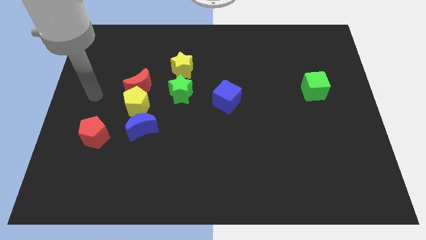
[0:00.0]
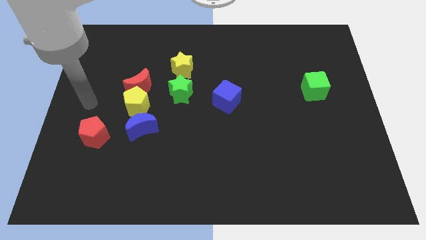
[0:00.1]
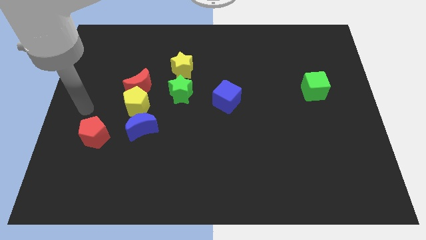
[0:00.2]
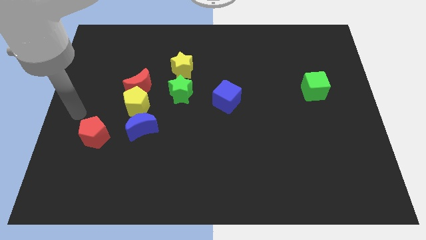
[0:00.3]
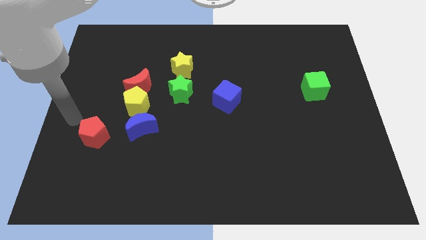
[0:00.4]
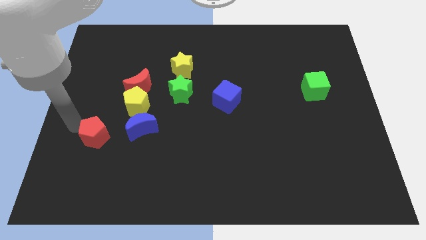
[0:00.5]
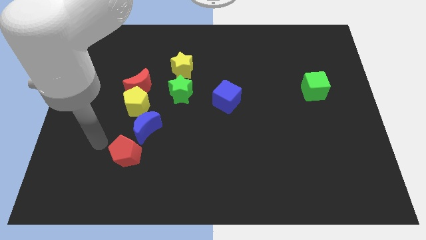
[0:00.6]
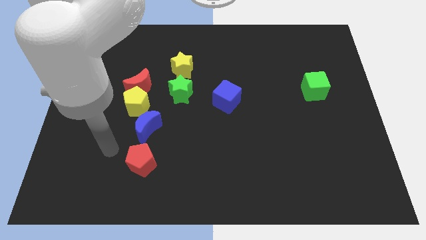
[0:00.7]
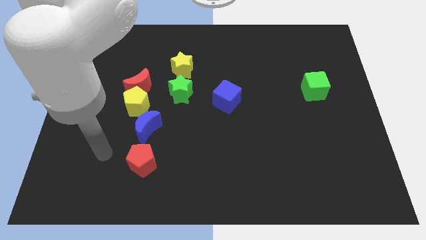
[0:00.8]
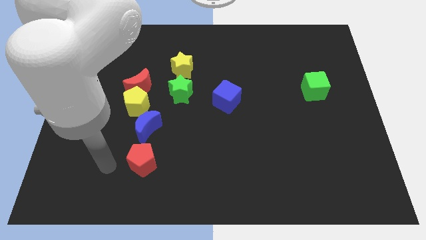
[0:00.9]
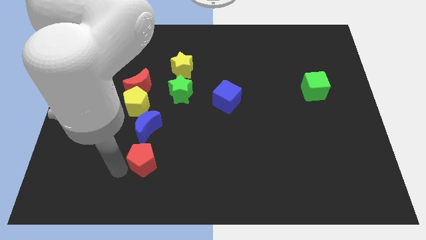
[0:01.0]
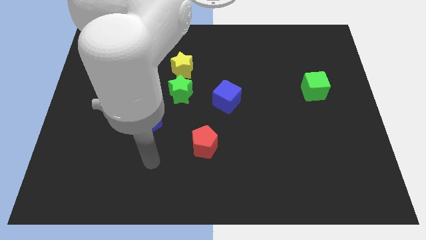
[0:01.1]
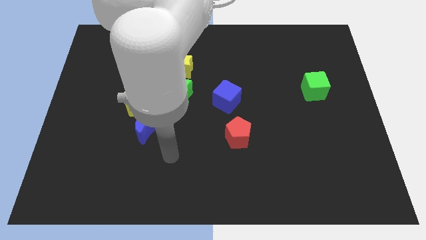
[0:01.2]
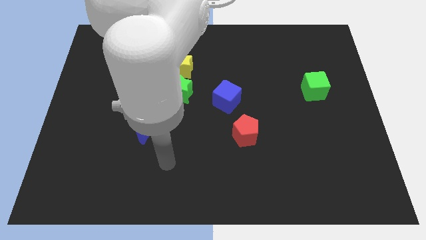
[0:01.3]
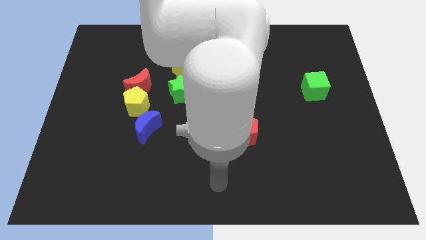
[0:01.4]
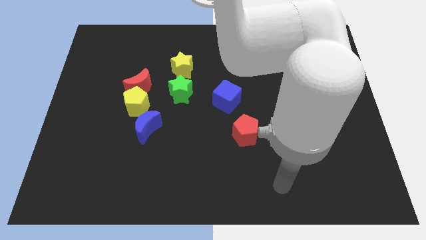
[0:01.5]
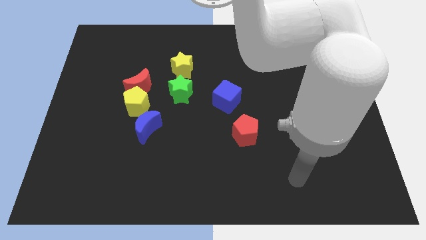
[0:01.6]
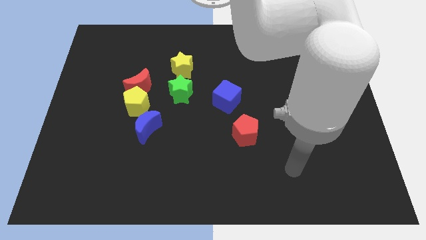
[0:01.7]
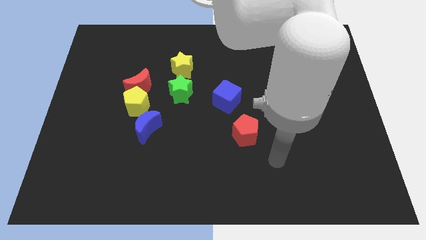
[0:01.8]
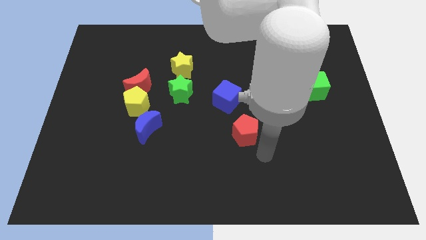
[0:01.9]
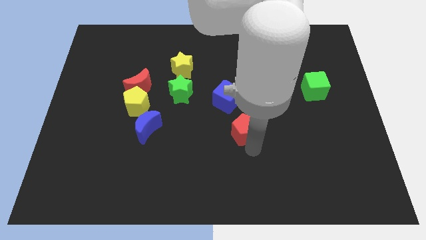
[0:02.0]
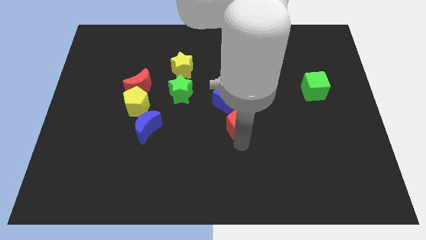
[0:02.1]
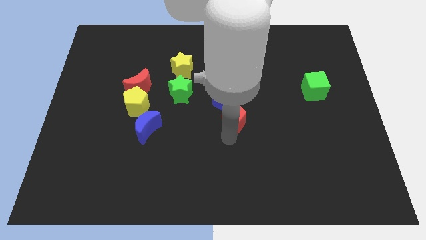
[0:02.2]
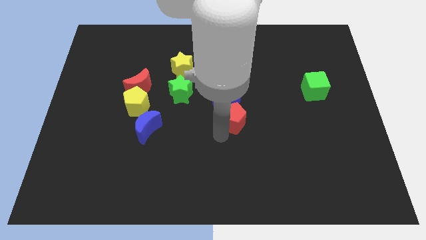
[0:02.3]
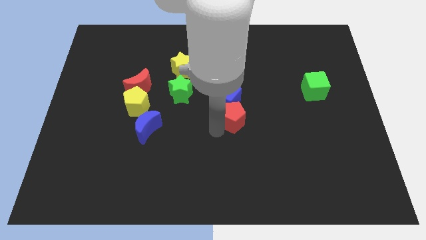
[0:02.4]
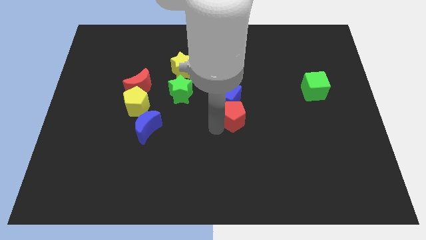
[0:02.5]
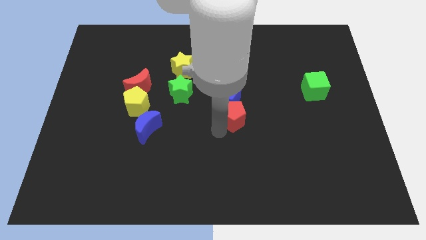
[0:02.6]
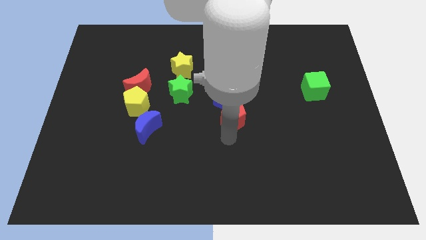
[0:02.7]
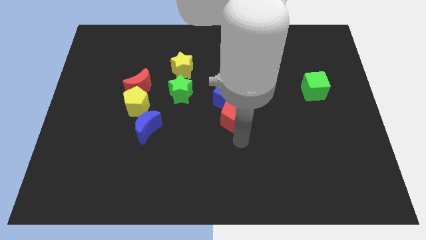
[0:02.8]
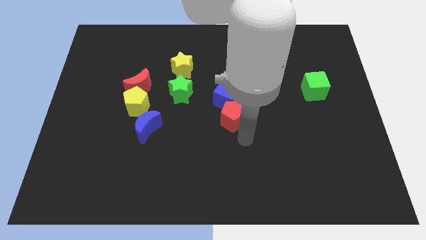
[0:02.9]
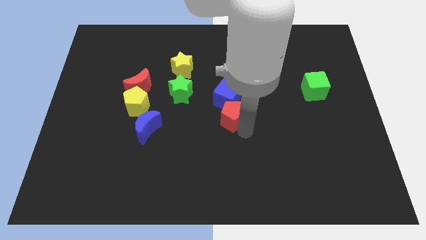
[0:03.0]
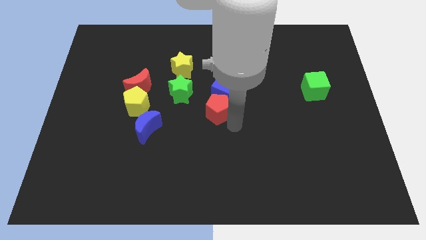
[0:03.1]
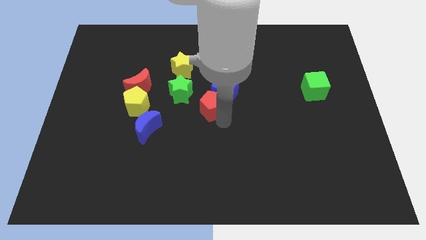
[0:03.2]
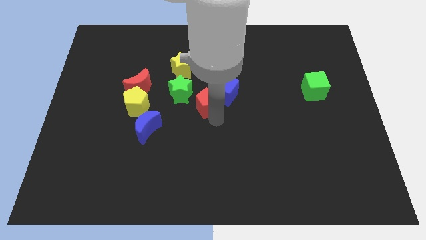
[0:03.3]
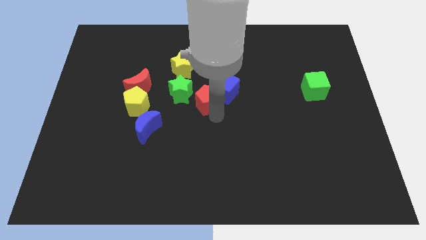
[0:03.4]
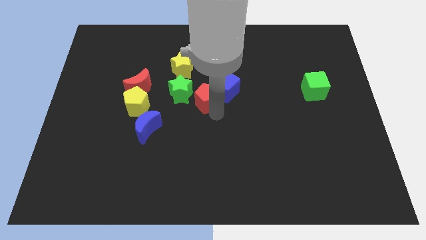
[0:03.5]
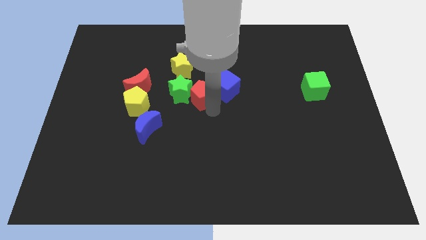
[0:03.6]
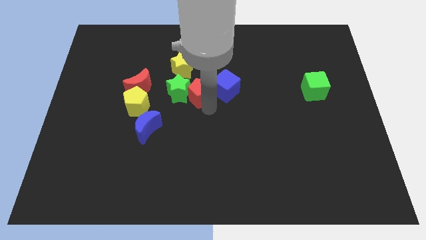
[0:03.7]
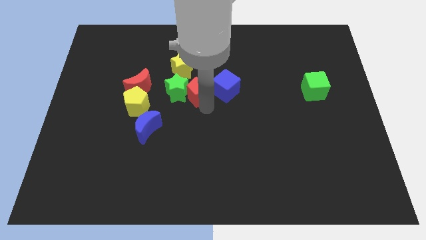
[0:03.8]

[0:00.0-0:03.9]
push the red pentagon next to the green star

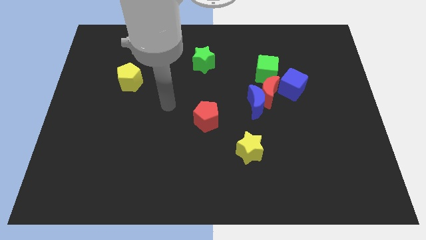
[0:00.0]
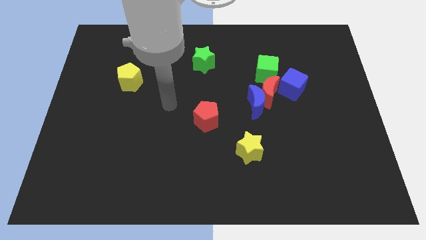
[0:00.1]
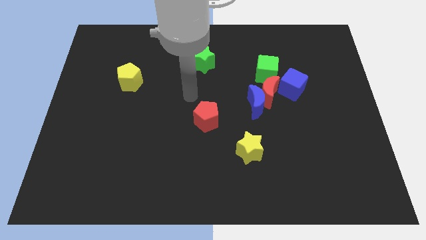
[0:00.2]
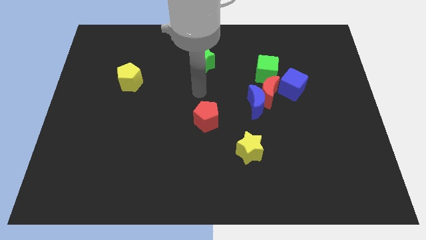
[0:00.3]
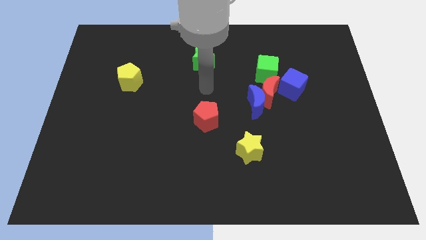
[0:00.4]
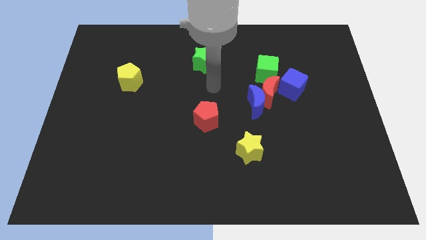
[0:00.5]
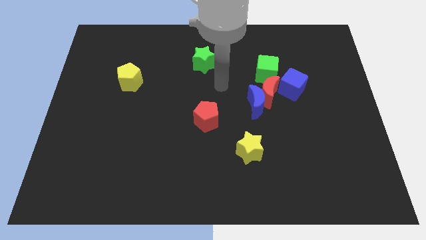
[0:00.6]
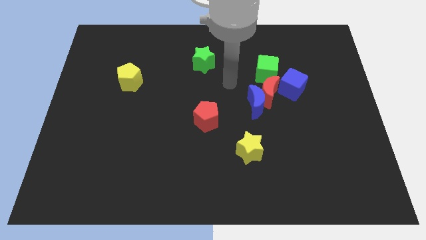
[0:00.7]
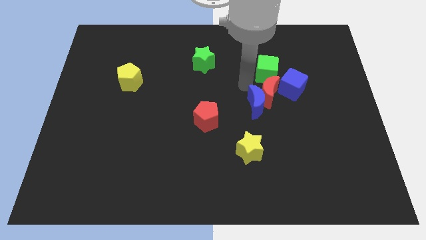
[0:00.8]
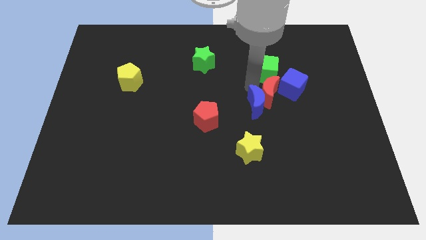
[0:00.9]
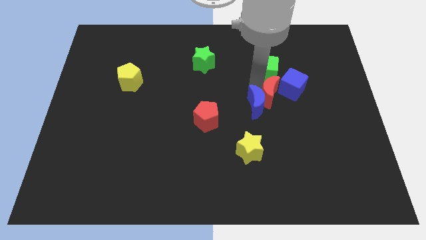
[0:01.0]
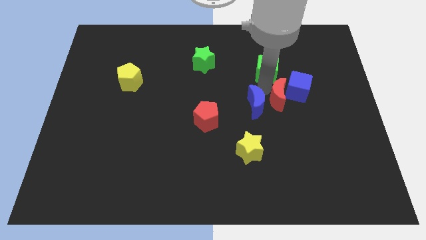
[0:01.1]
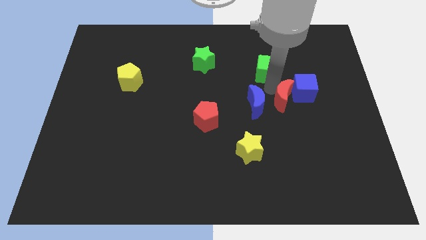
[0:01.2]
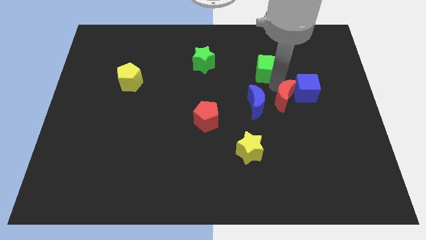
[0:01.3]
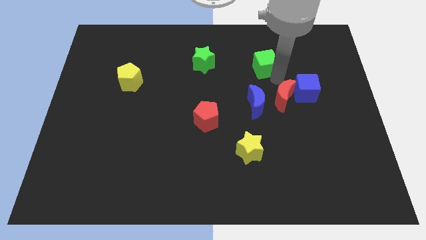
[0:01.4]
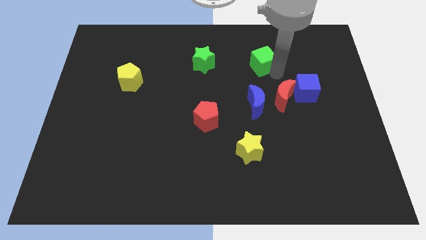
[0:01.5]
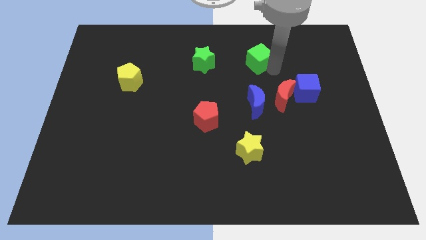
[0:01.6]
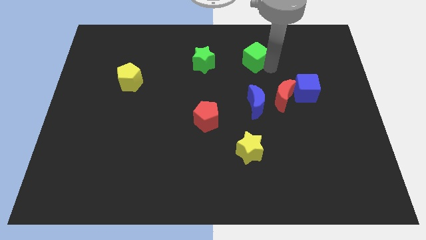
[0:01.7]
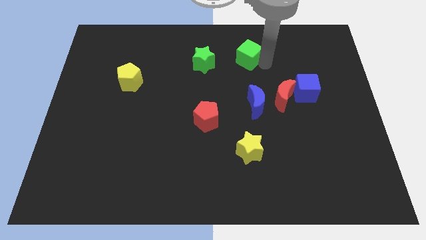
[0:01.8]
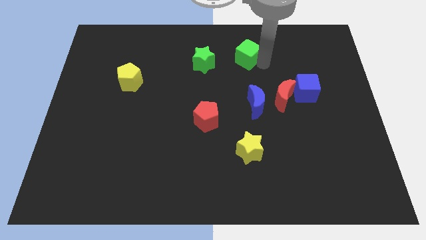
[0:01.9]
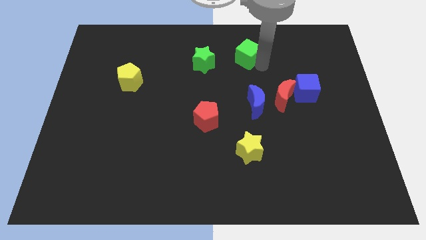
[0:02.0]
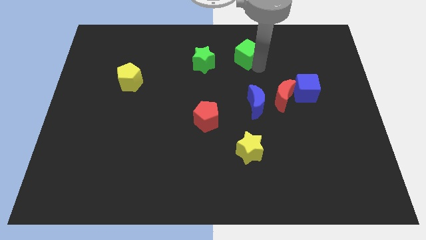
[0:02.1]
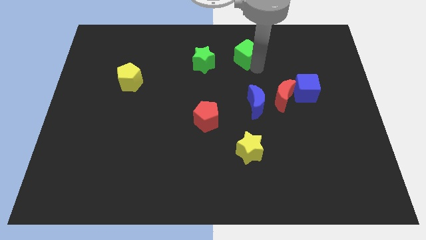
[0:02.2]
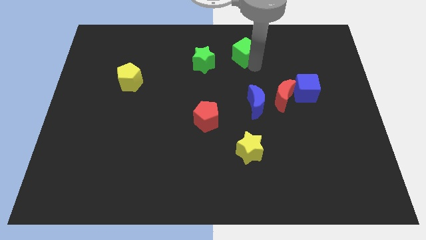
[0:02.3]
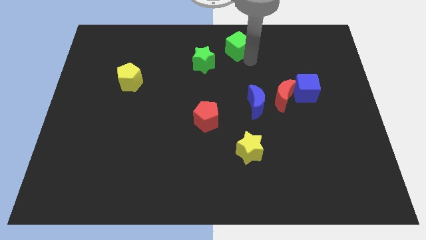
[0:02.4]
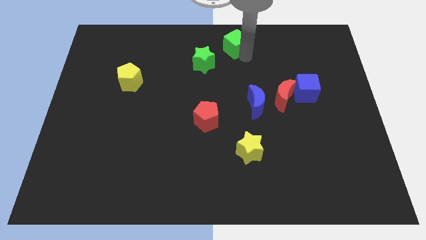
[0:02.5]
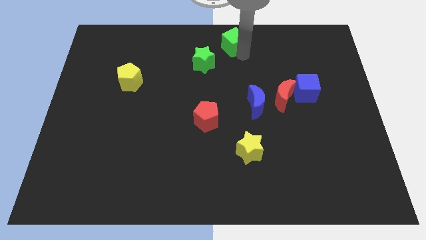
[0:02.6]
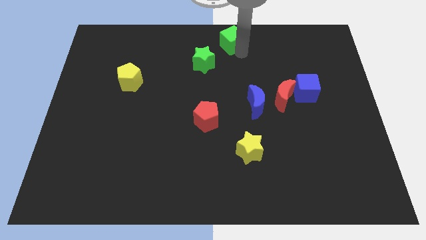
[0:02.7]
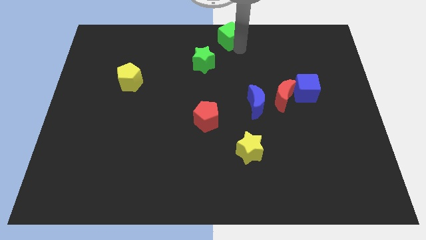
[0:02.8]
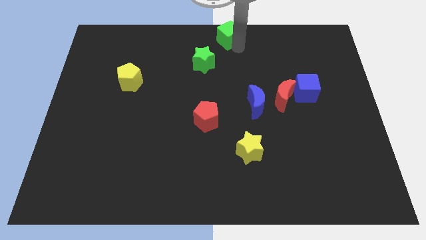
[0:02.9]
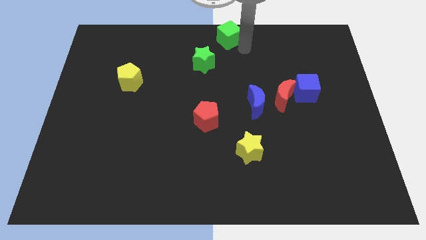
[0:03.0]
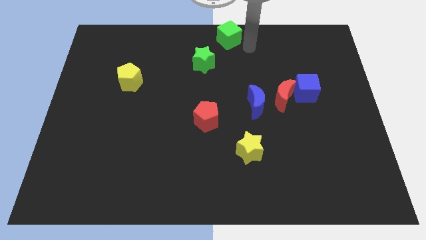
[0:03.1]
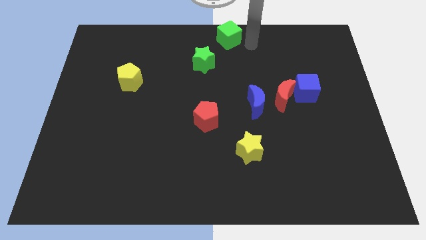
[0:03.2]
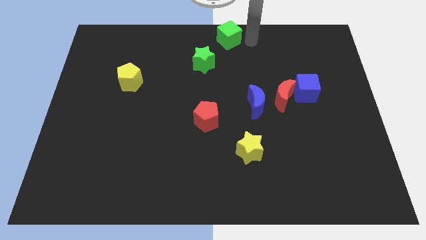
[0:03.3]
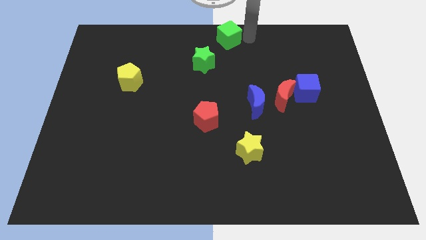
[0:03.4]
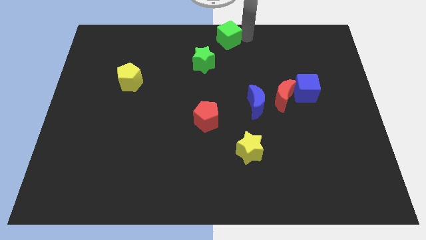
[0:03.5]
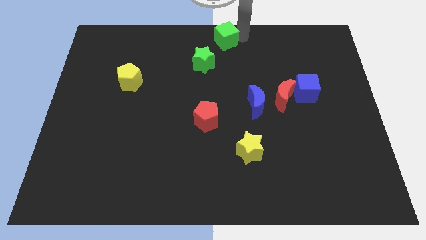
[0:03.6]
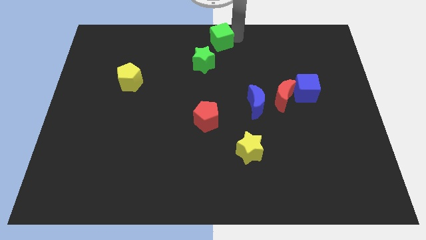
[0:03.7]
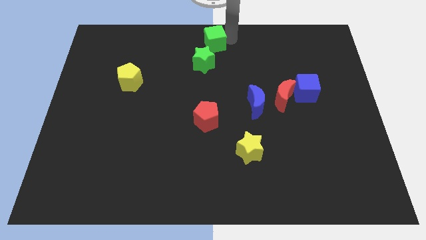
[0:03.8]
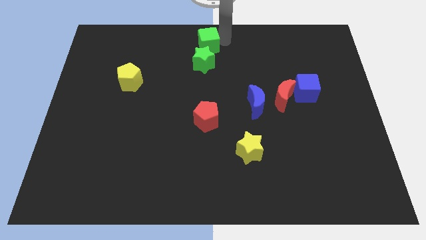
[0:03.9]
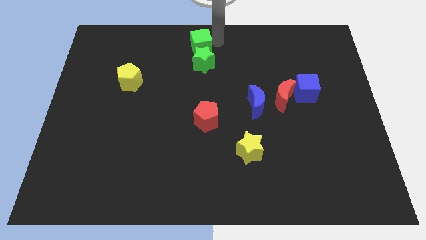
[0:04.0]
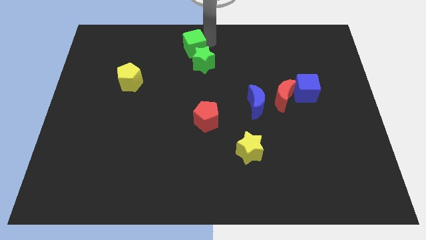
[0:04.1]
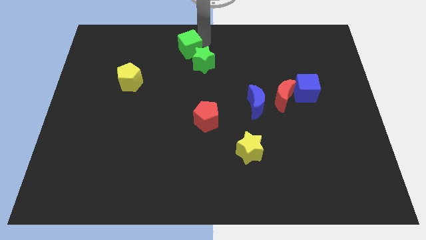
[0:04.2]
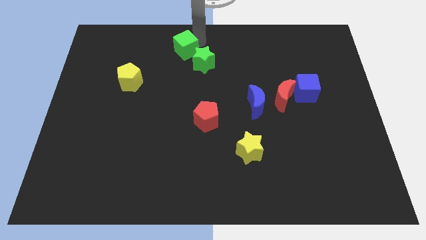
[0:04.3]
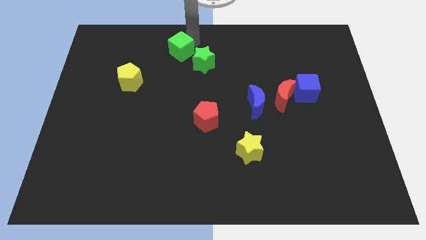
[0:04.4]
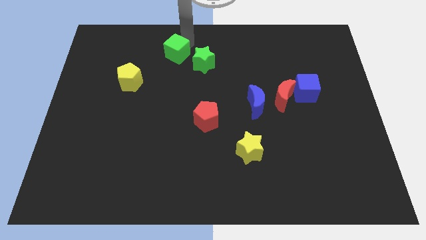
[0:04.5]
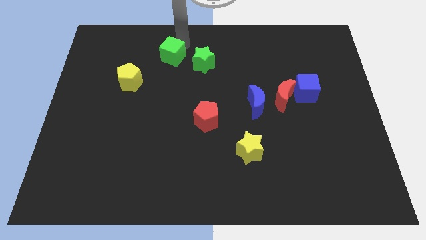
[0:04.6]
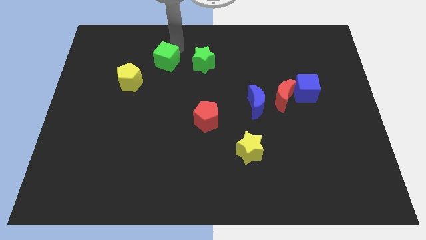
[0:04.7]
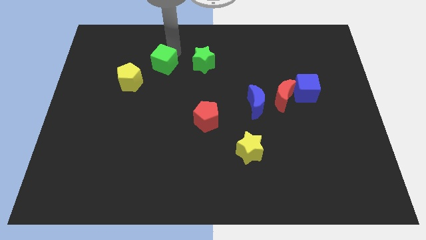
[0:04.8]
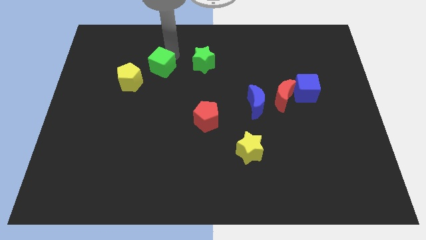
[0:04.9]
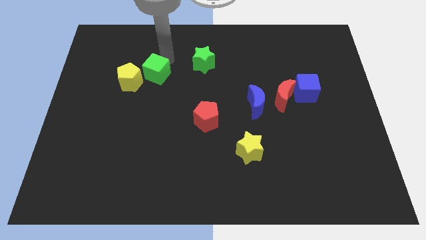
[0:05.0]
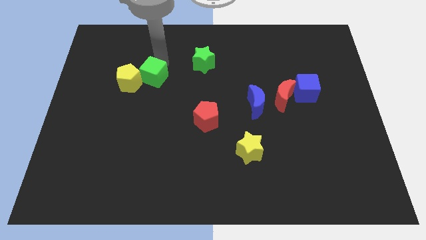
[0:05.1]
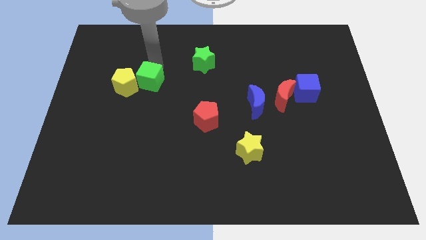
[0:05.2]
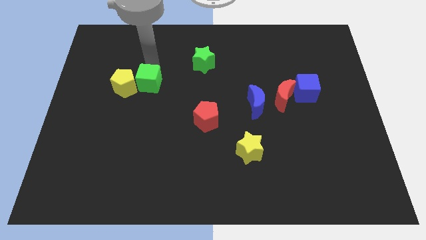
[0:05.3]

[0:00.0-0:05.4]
put the green cube towards the yellow pentagon
